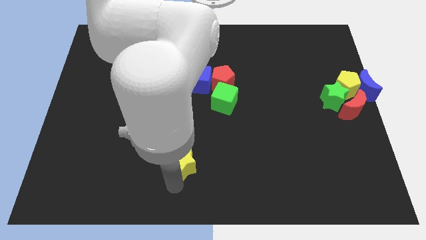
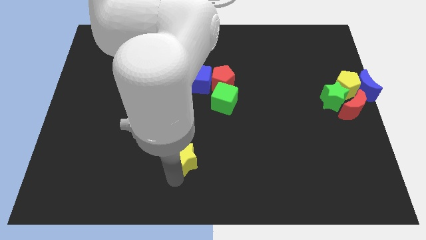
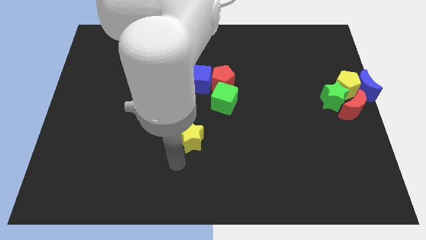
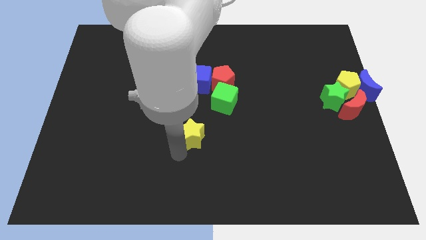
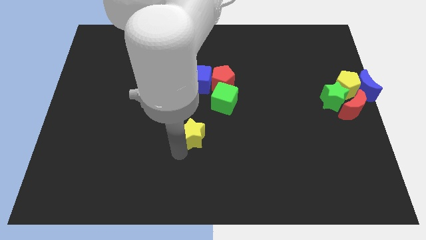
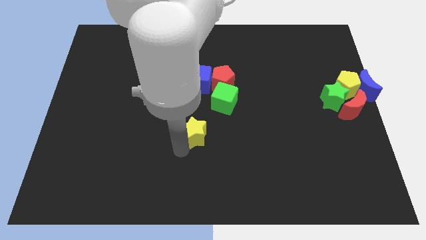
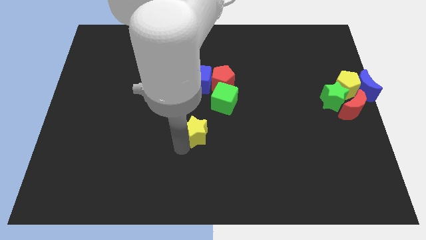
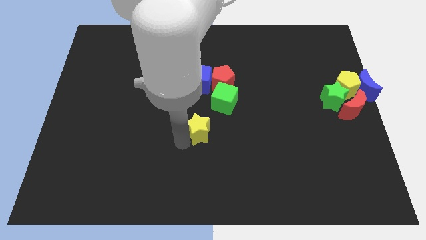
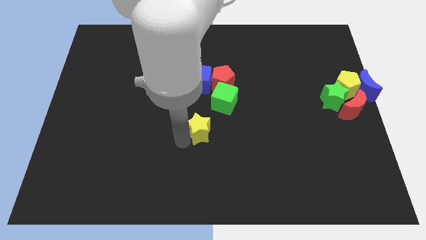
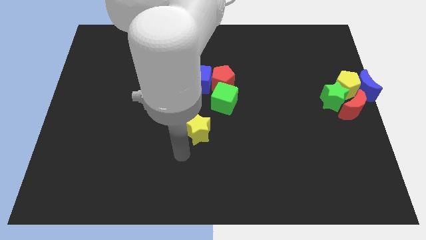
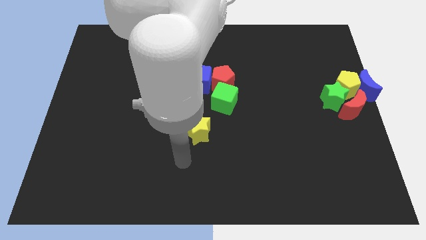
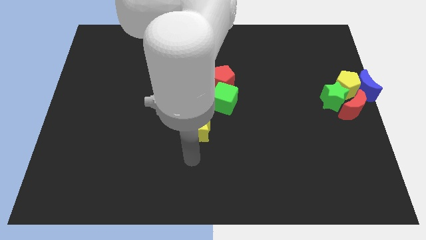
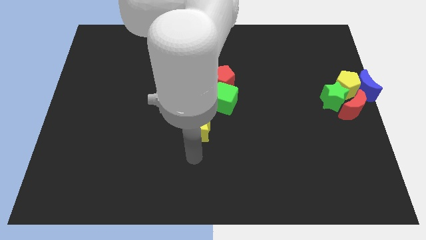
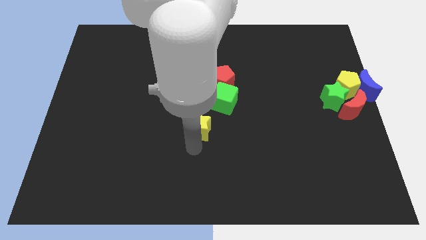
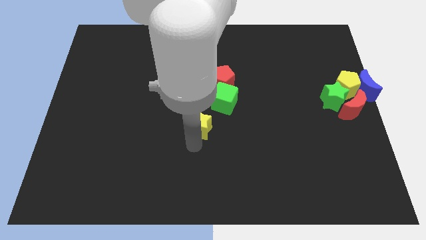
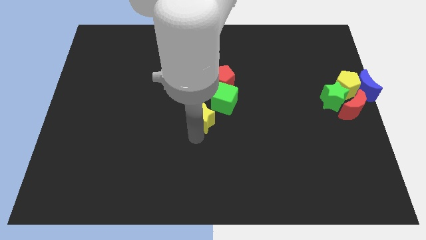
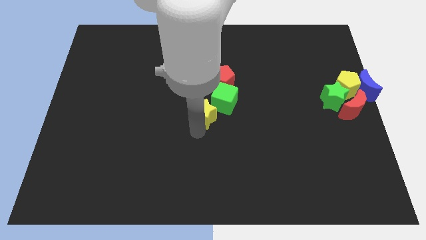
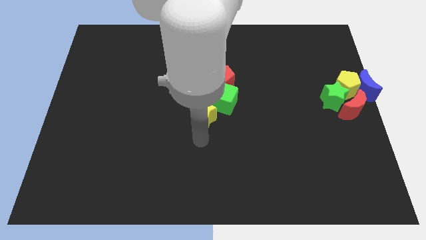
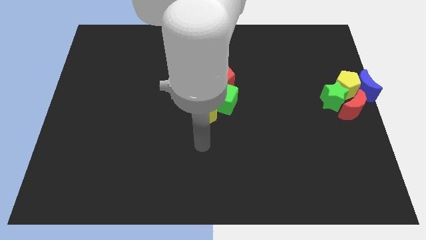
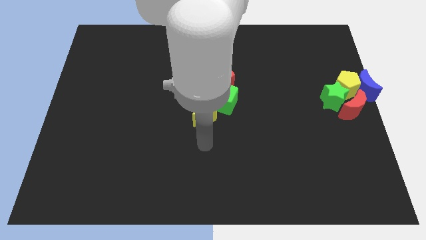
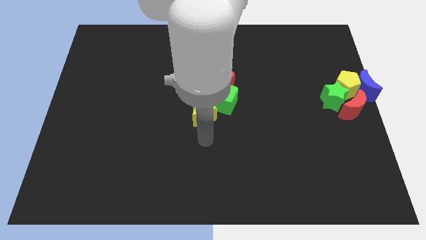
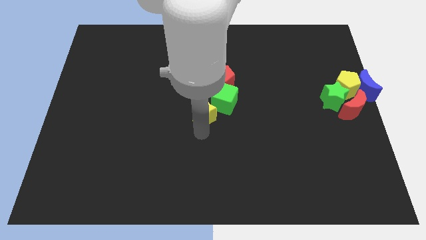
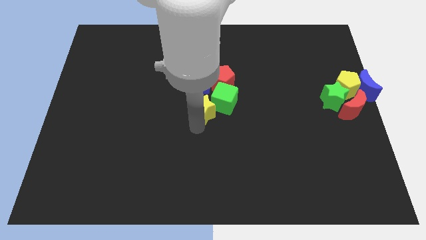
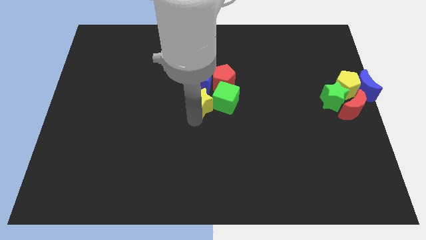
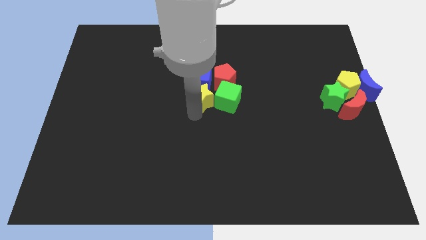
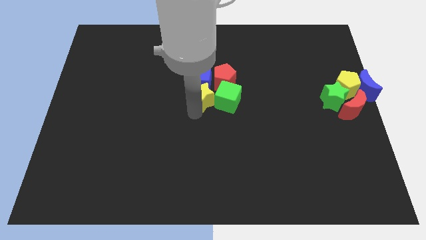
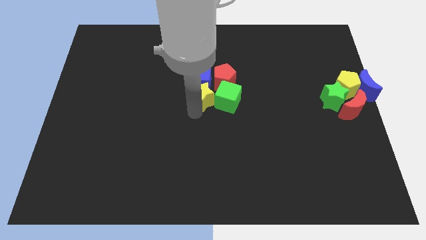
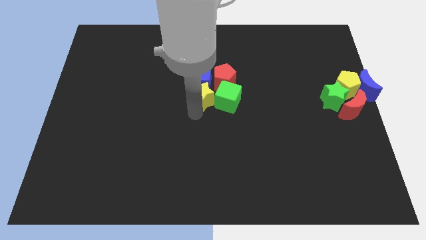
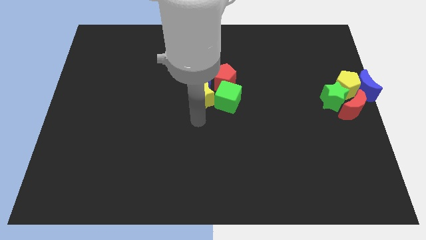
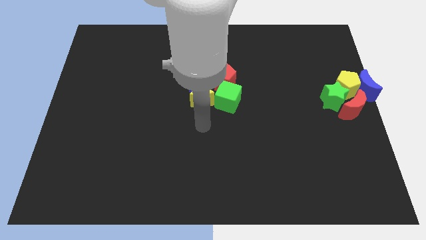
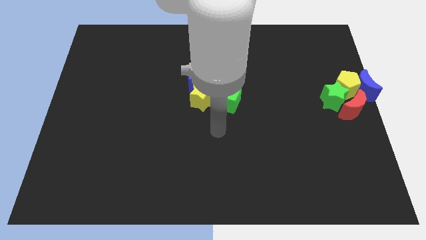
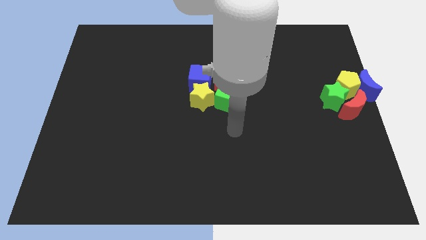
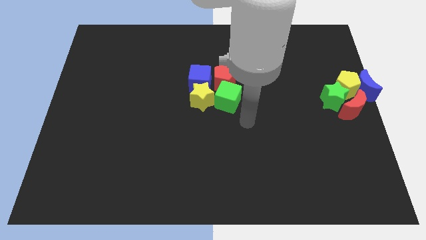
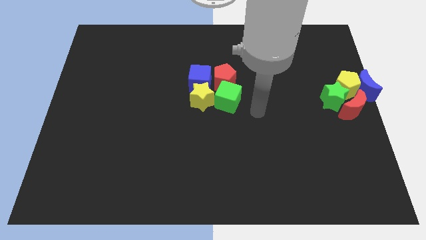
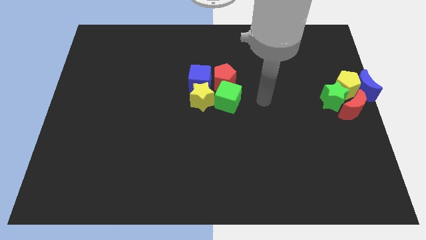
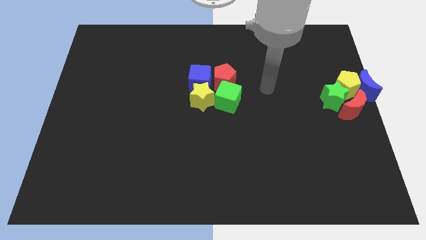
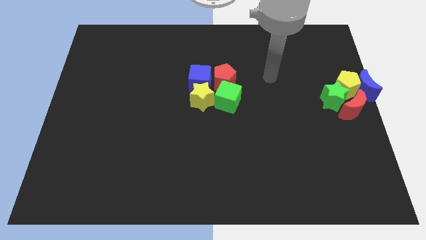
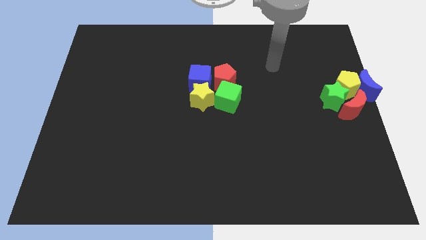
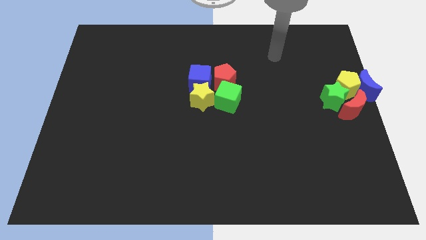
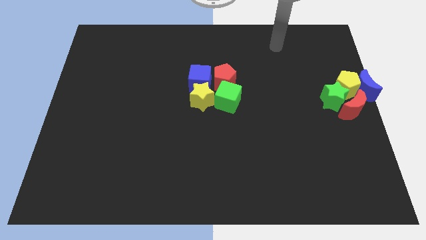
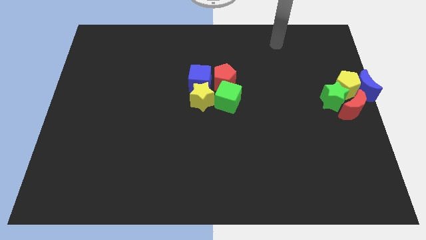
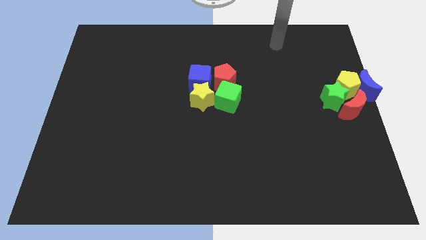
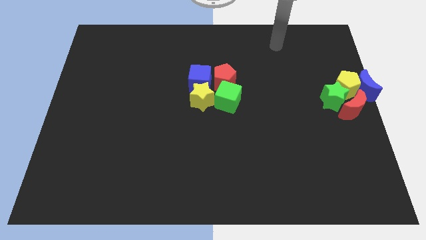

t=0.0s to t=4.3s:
move the yellow star towards center of the board

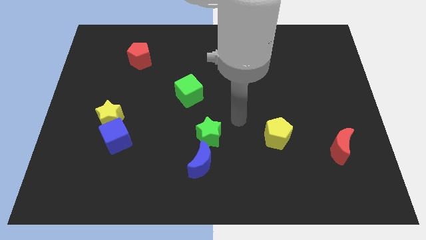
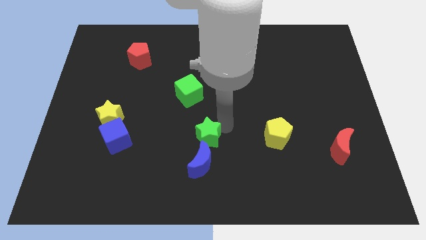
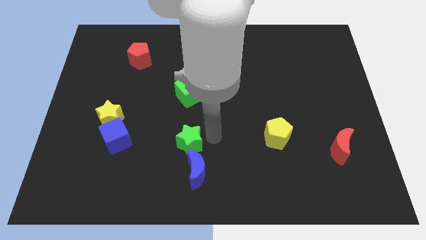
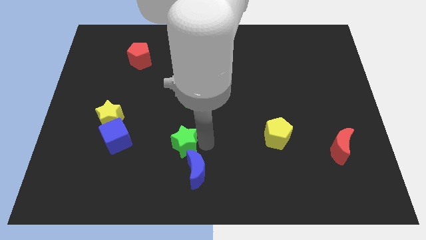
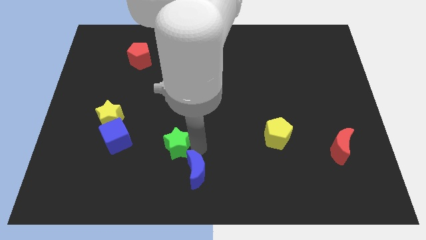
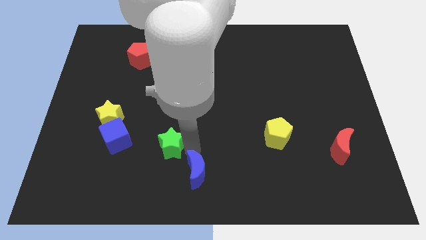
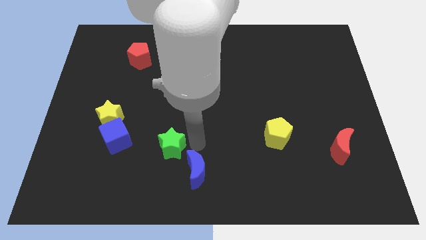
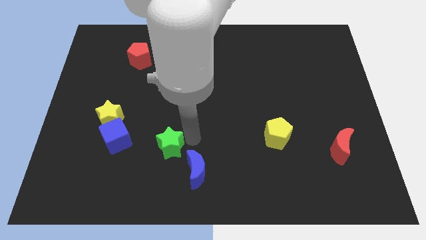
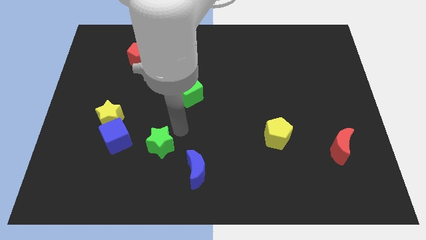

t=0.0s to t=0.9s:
separate the green star from blue crescent

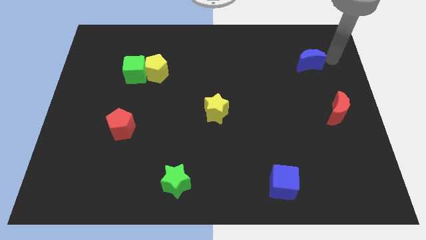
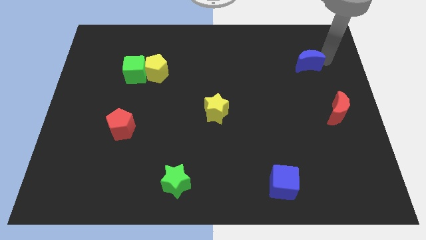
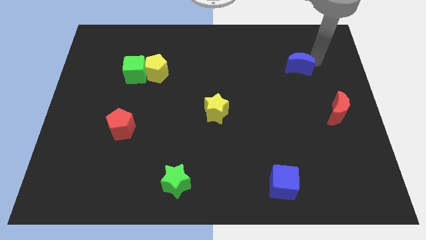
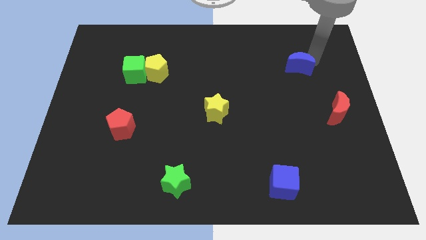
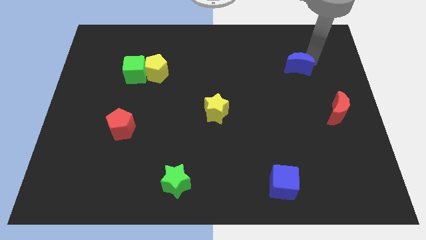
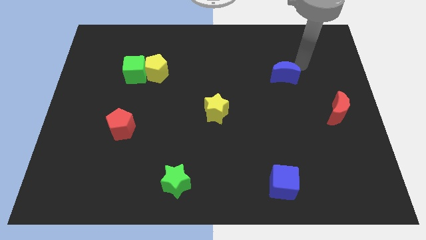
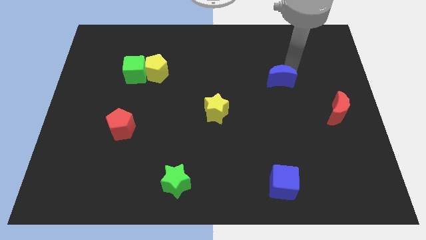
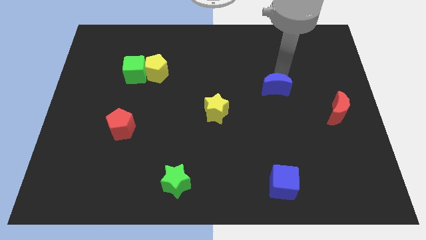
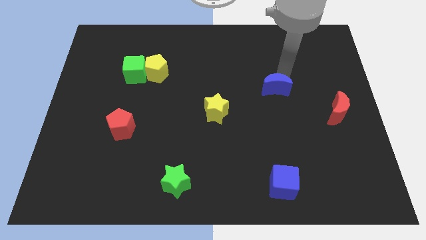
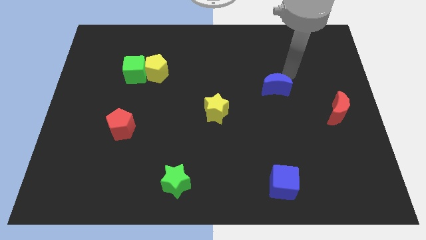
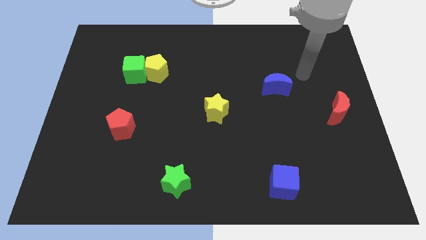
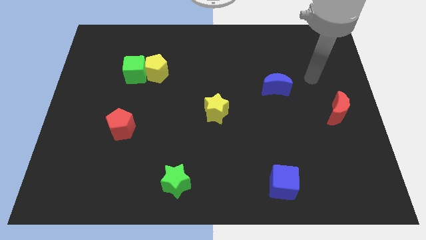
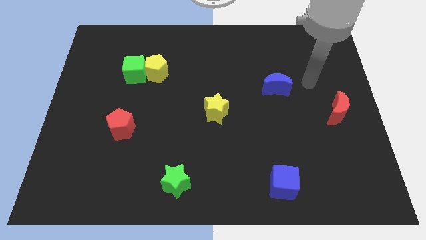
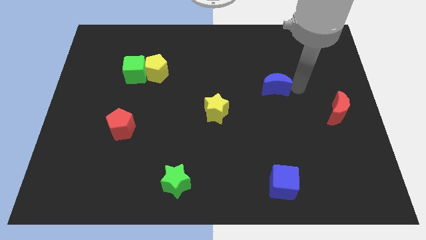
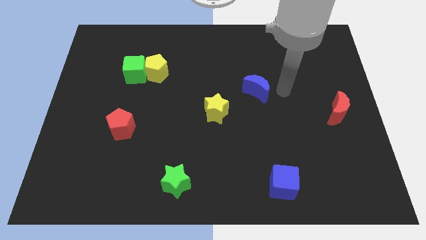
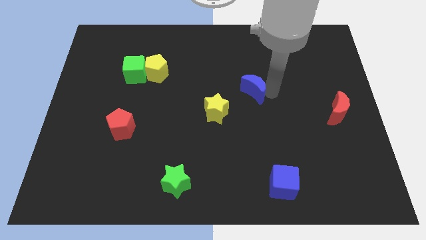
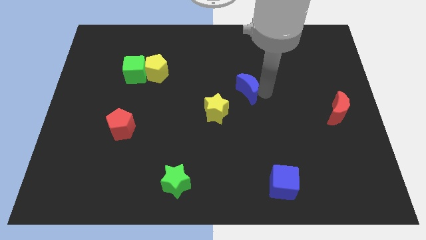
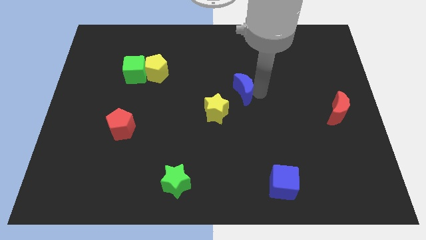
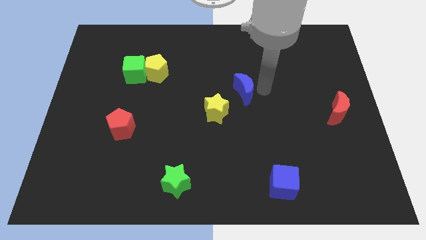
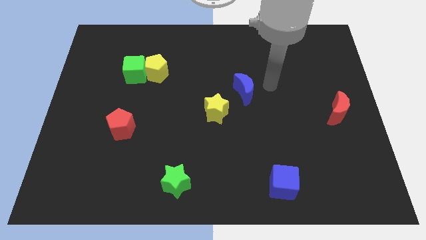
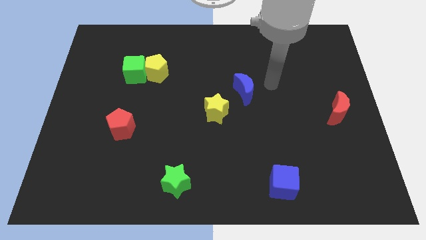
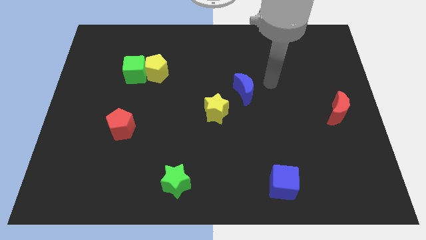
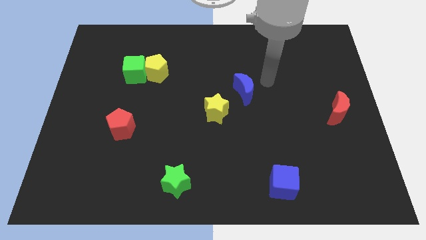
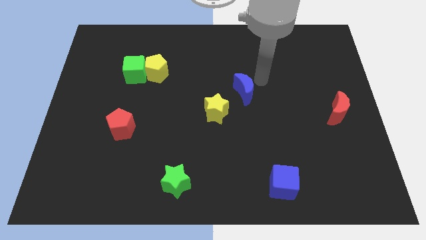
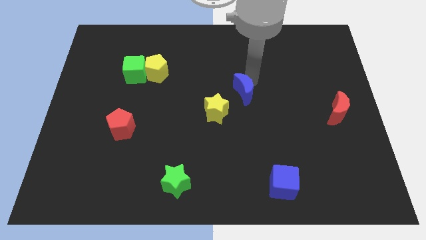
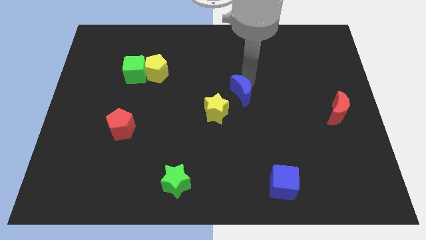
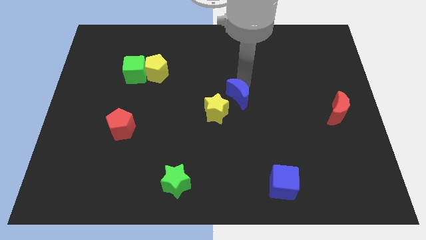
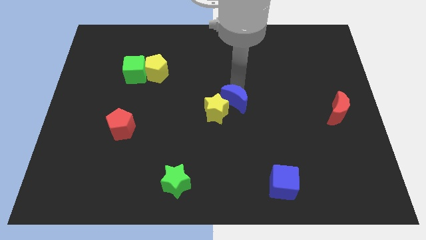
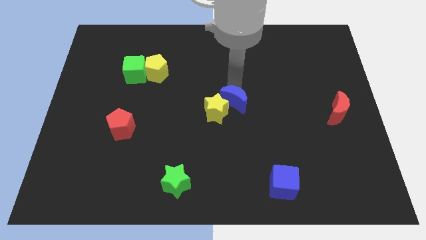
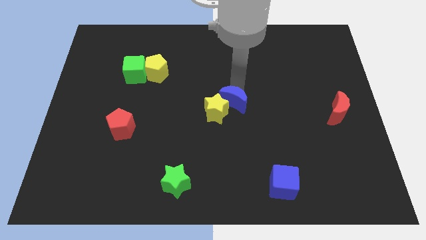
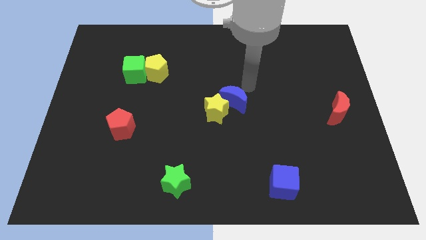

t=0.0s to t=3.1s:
move the blue moon into the yellow star

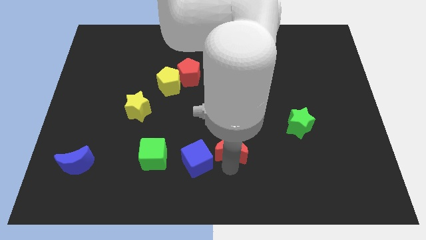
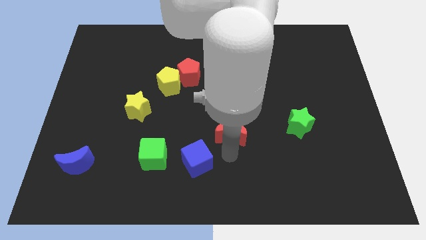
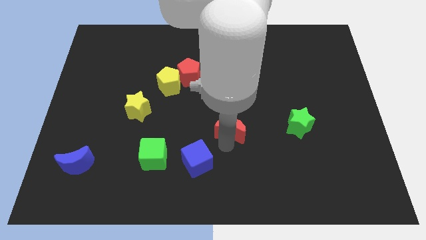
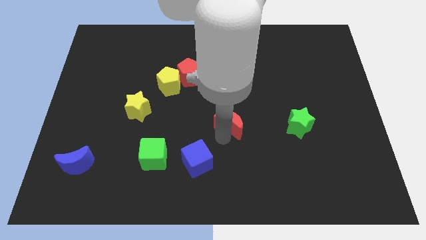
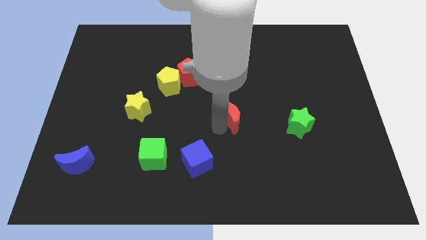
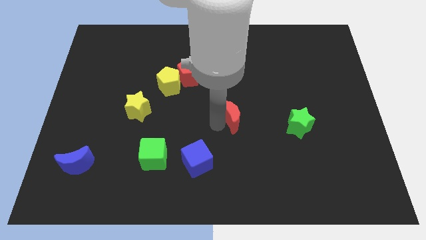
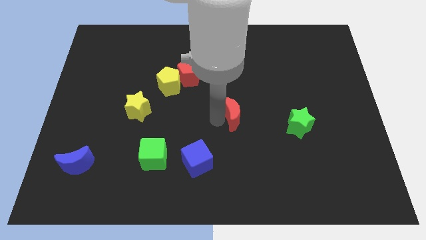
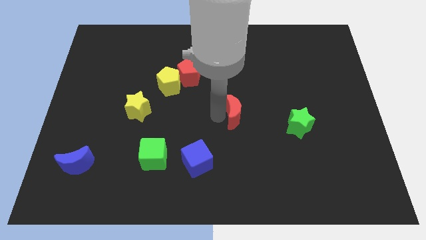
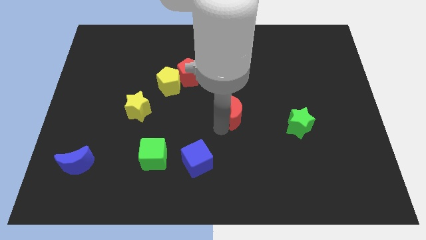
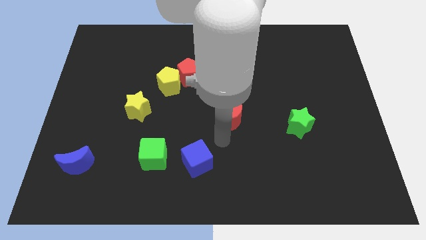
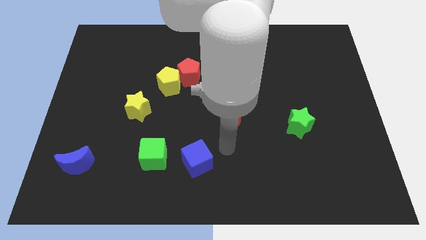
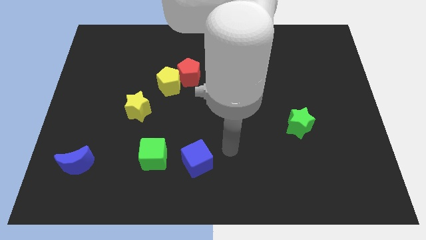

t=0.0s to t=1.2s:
push the red crescent slightly towards the center of the board
